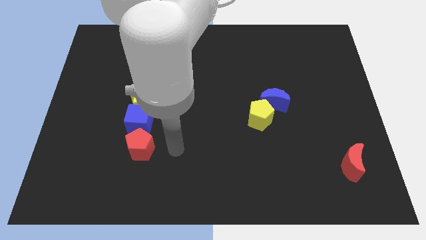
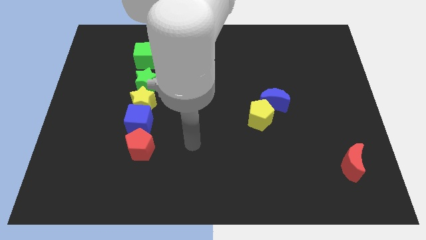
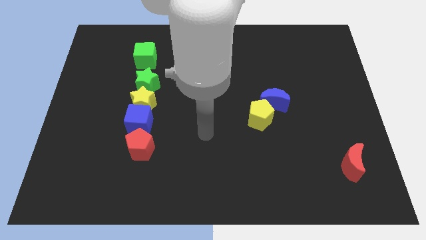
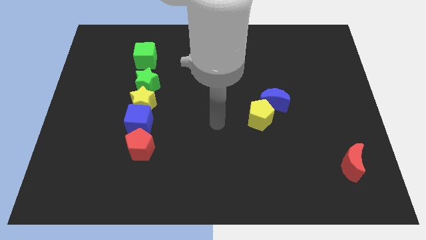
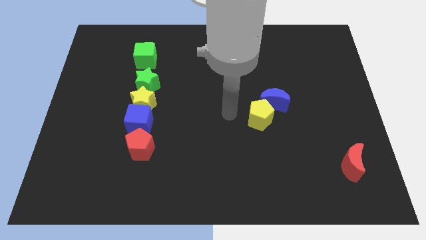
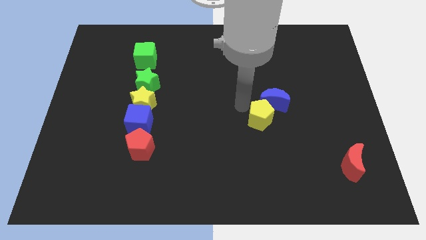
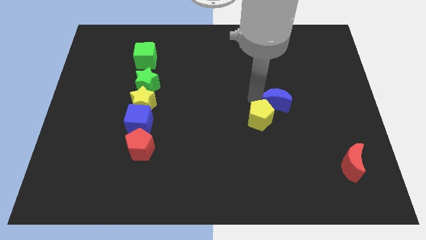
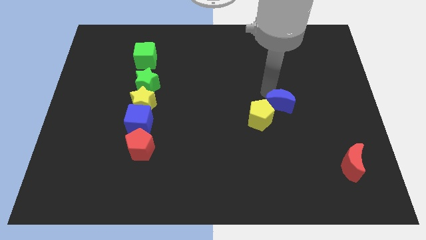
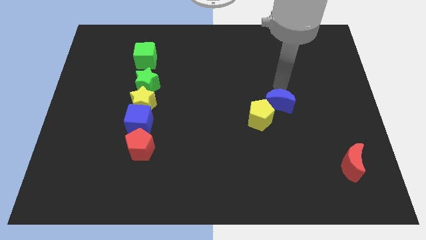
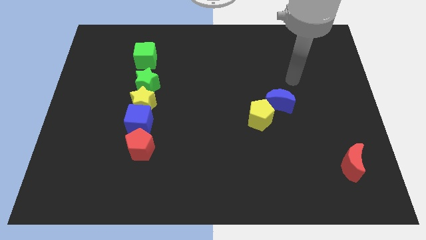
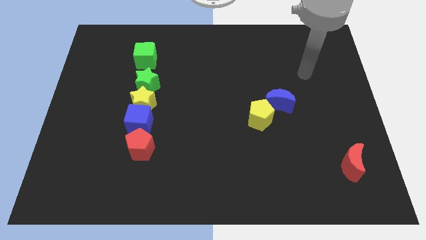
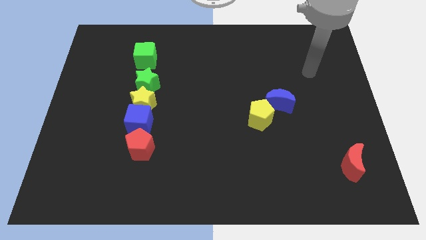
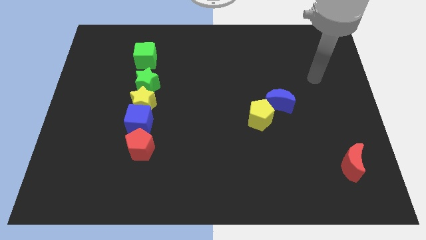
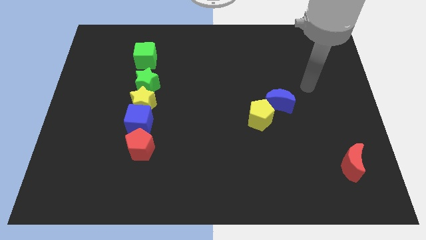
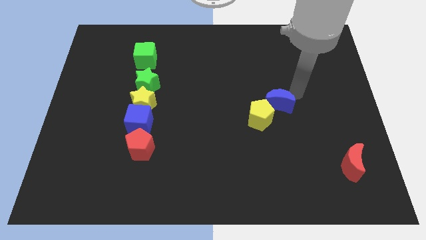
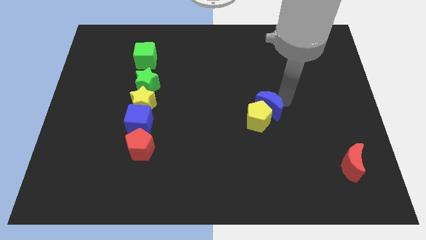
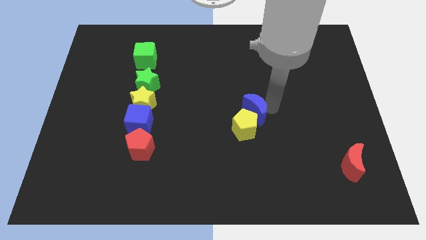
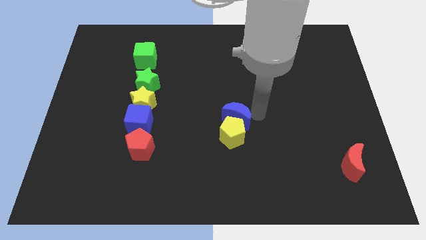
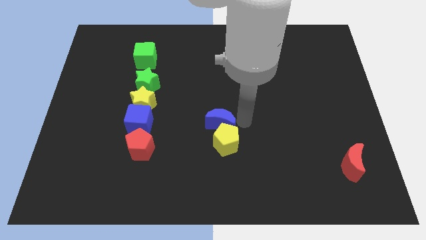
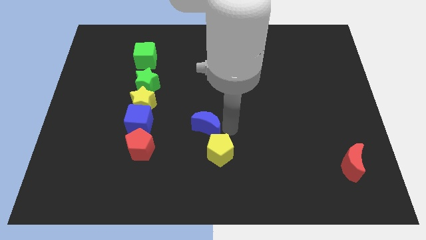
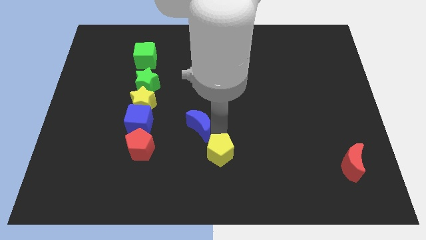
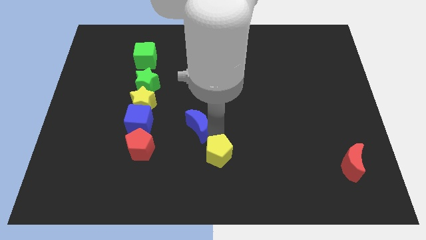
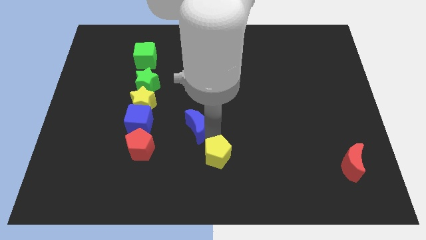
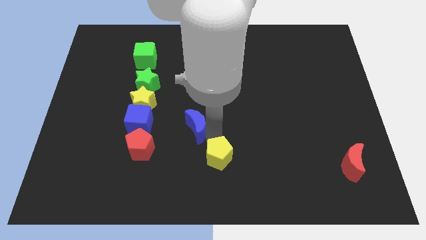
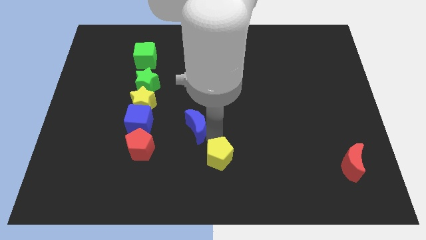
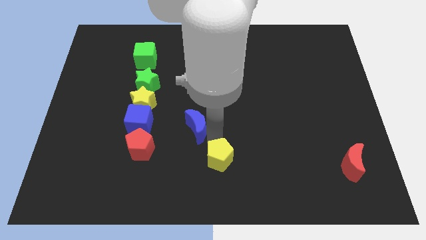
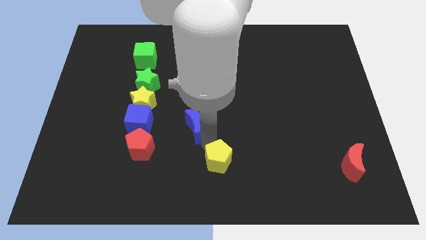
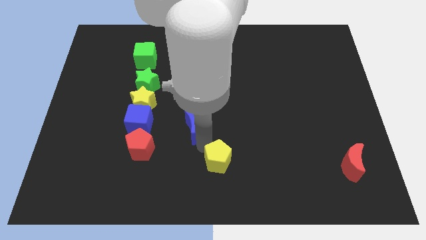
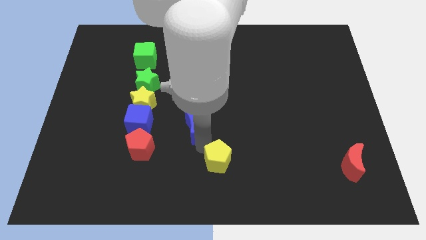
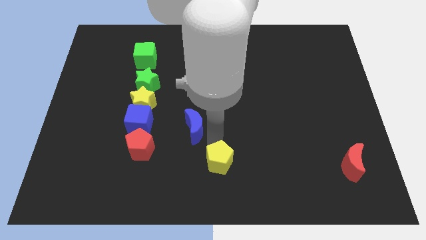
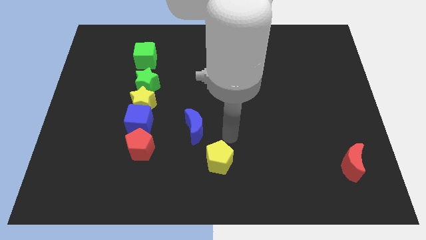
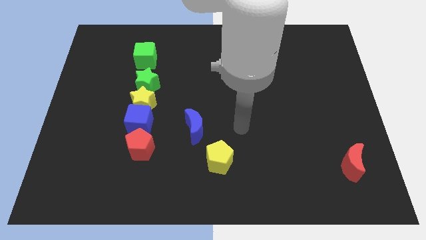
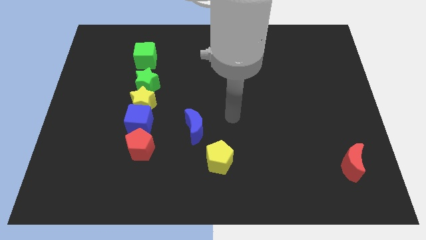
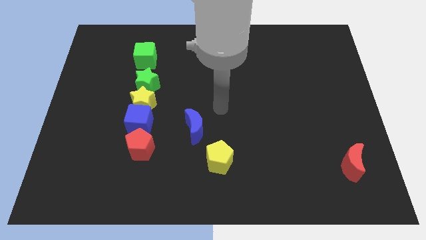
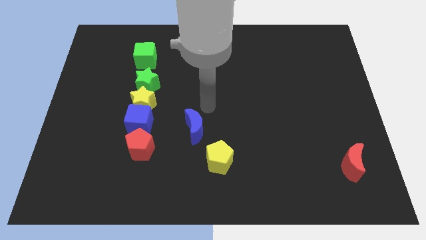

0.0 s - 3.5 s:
put the blue crescent to the top left side of the yellow pentagon

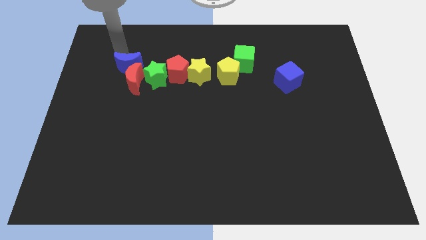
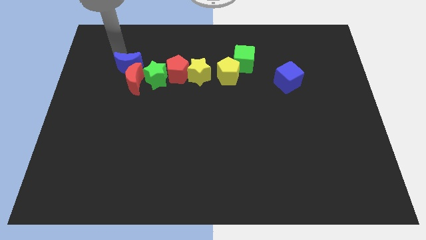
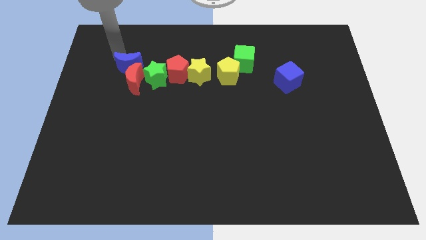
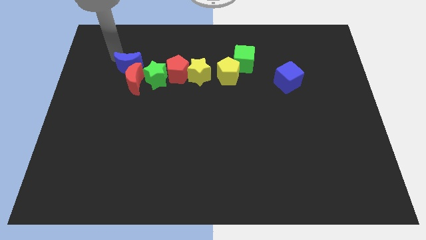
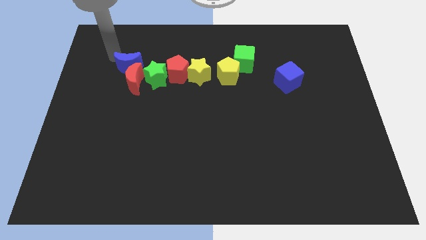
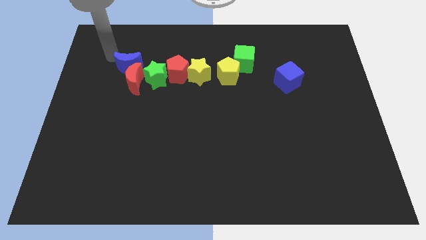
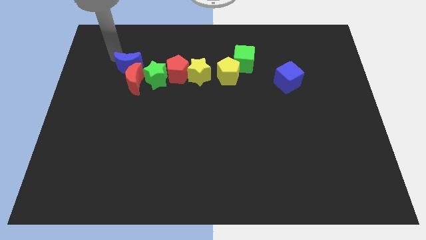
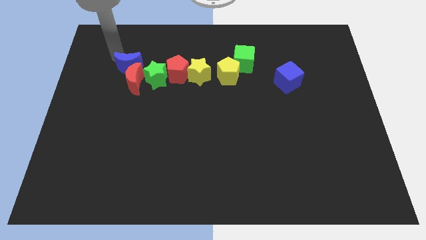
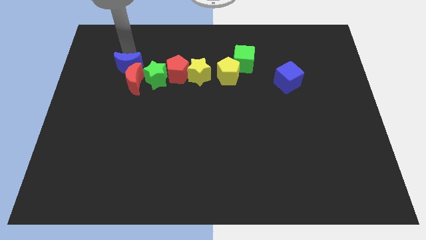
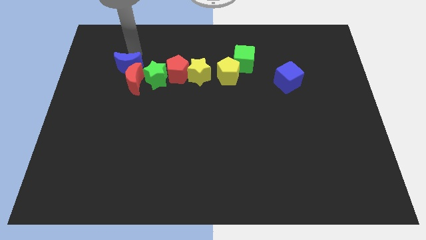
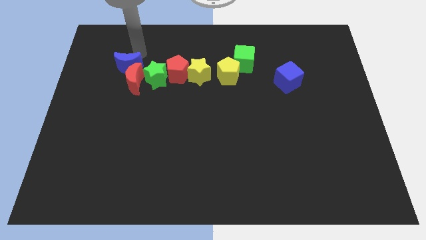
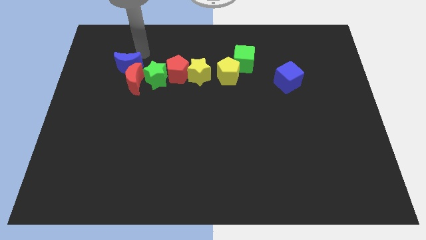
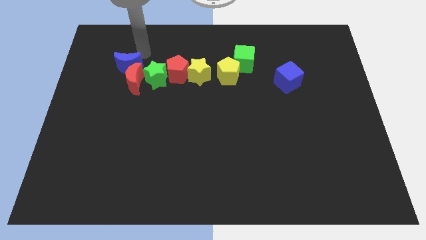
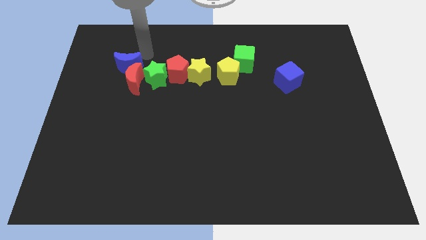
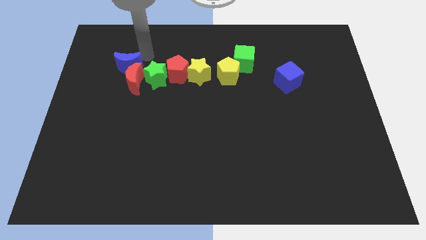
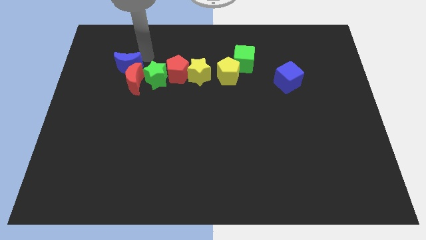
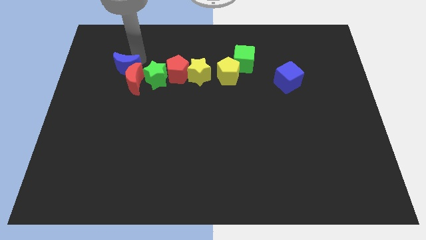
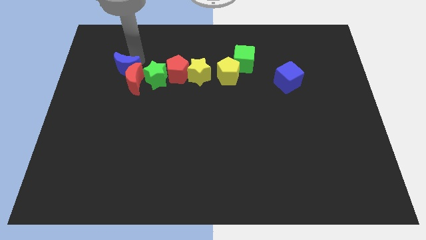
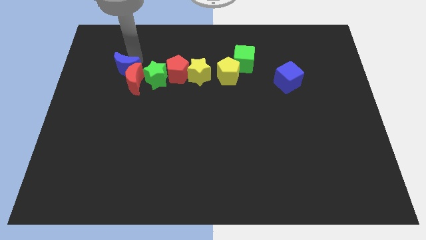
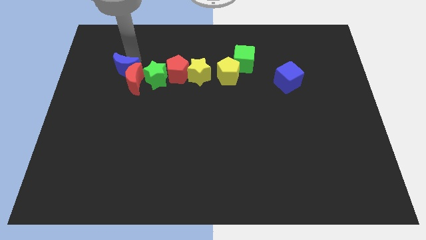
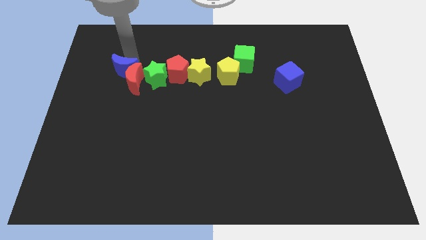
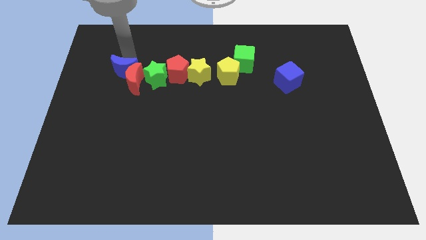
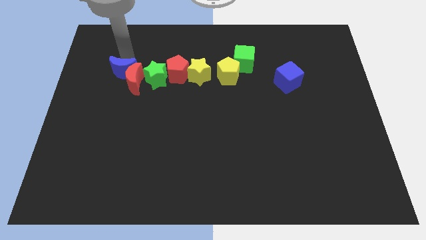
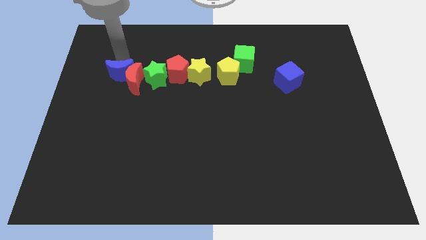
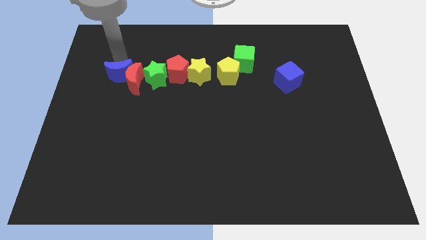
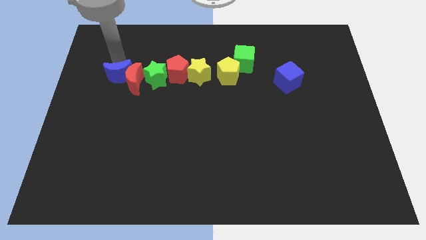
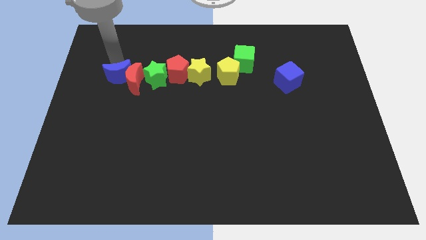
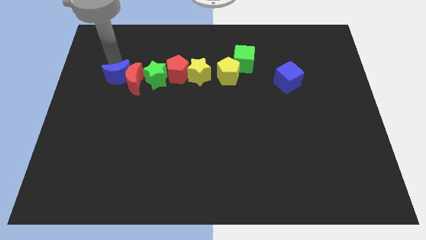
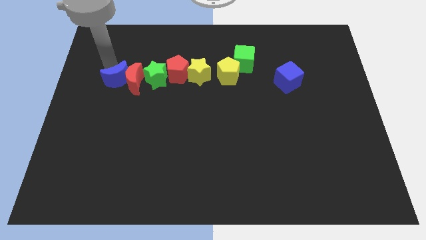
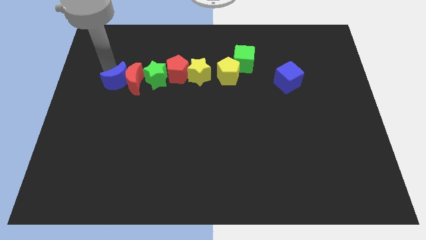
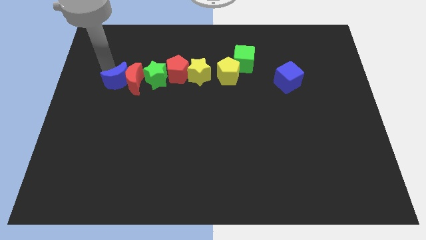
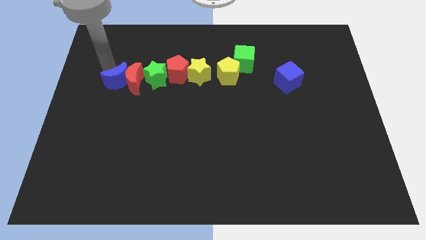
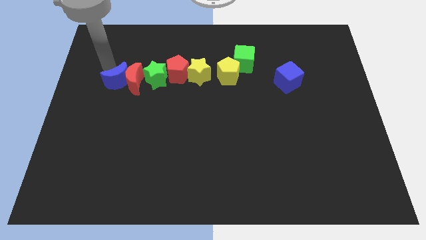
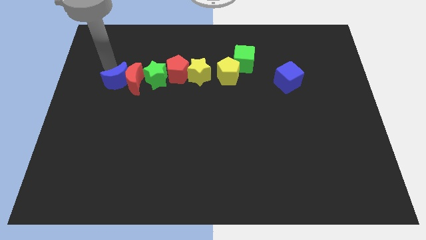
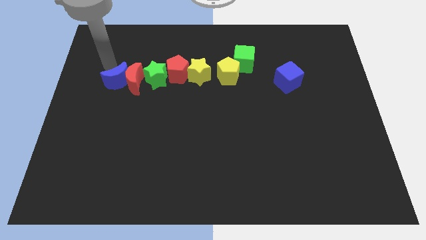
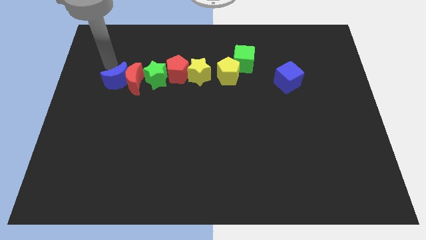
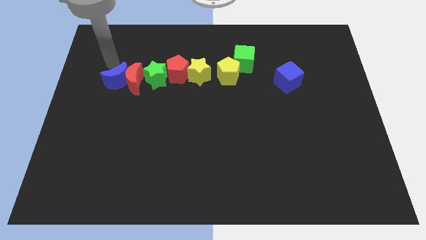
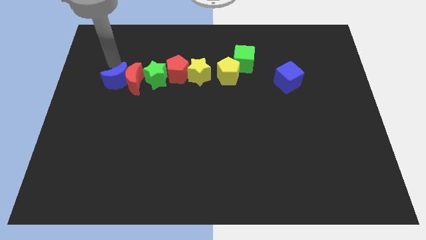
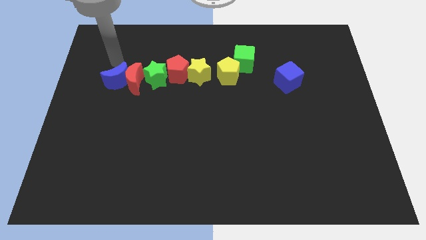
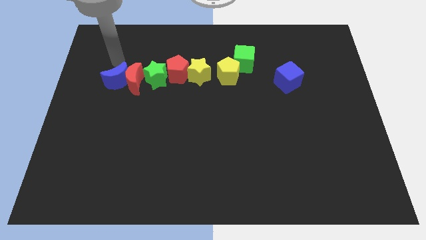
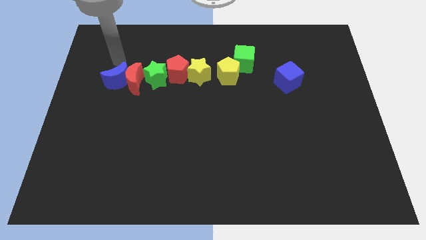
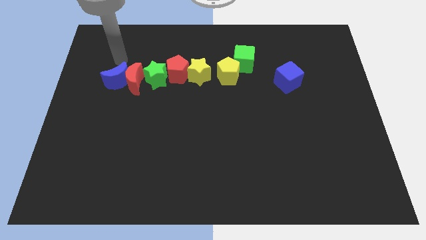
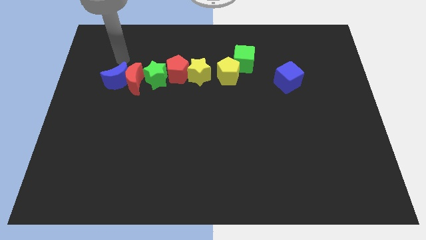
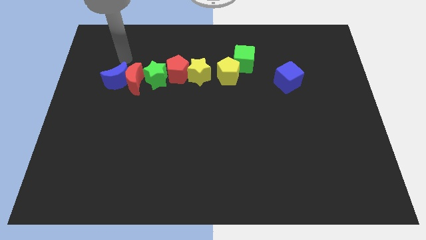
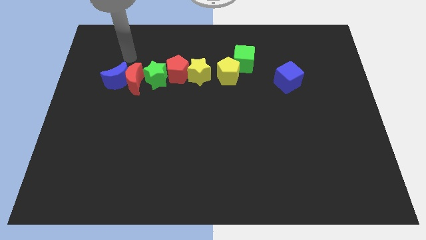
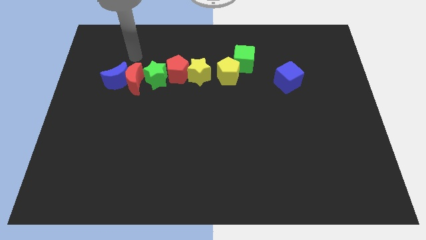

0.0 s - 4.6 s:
slide the blue crescent to the left side of the red crescent

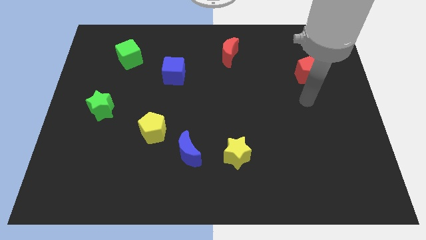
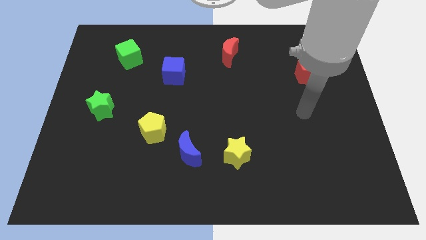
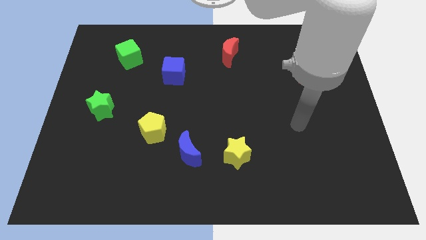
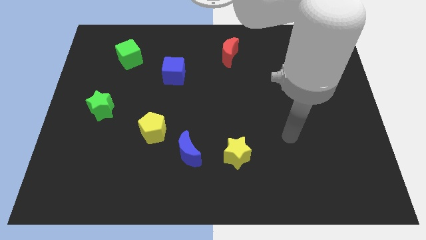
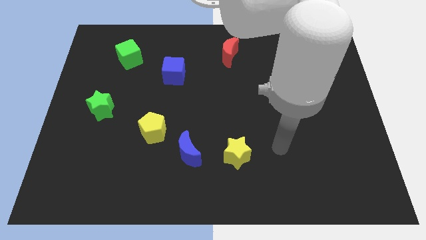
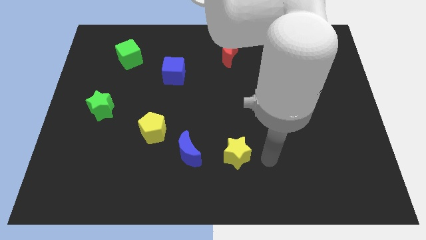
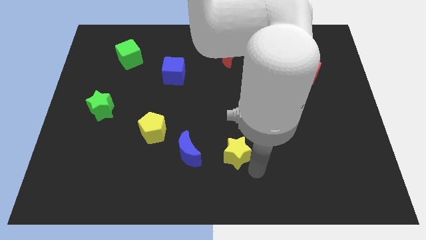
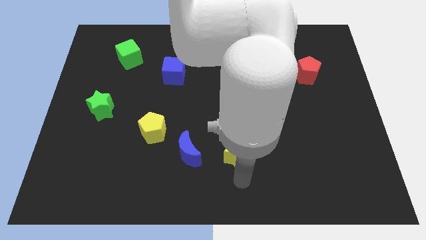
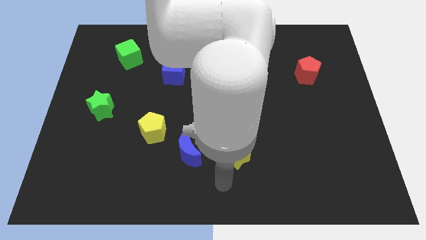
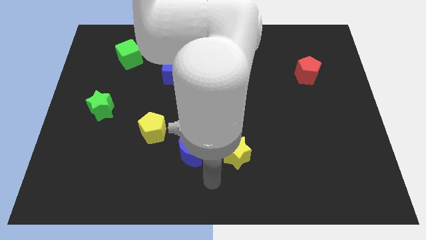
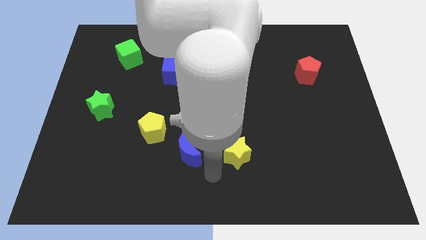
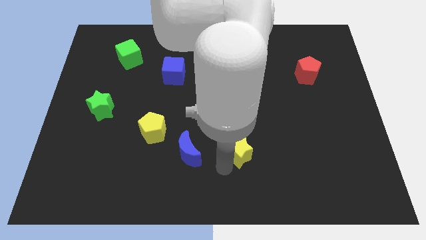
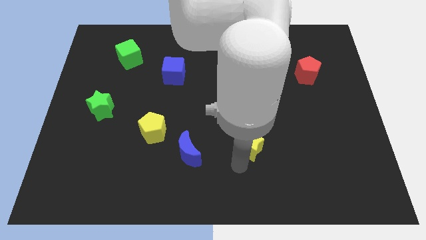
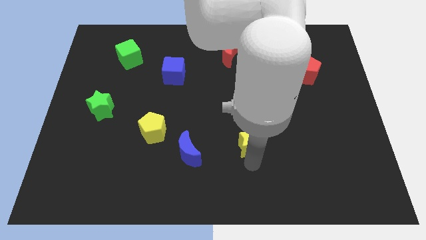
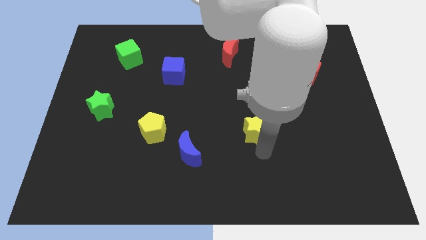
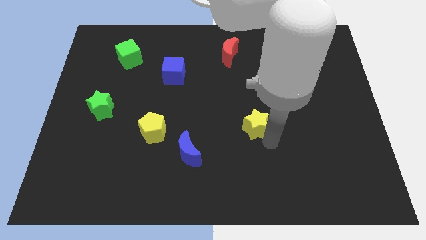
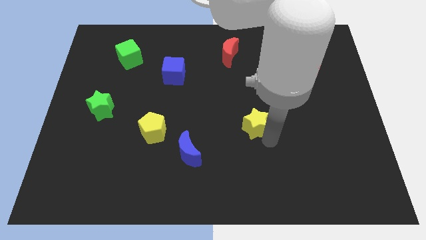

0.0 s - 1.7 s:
move the yellow star diagonally top right to the blue moon
